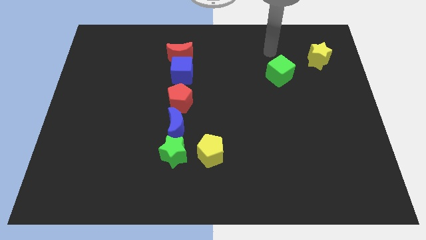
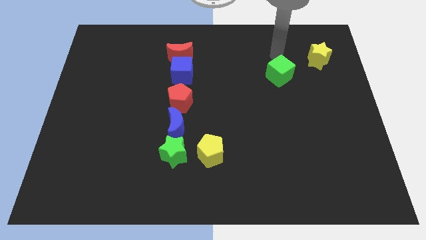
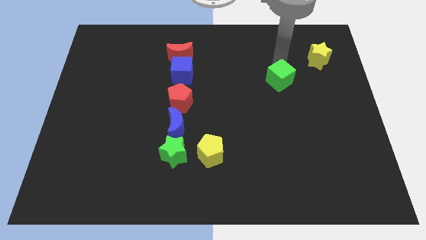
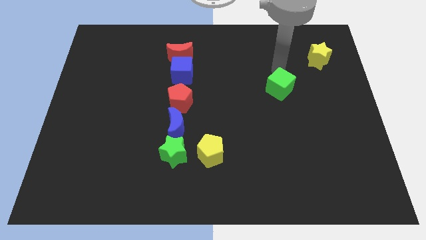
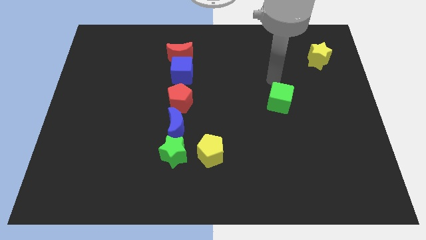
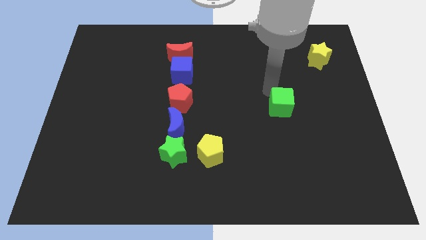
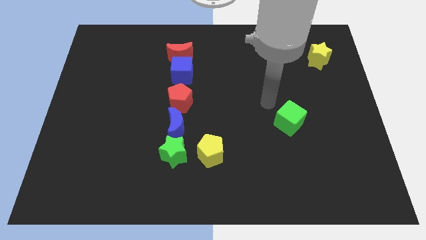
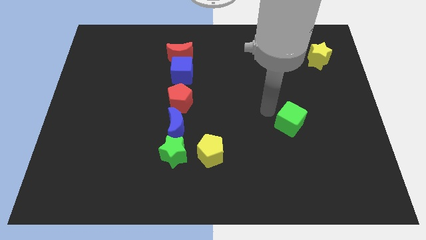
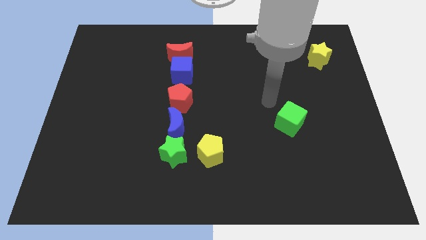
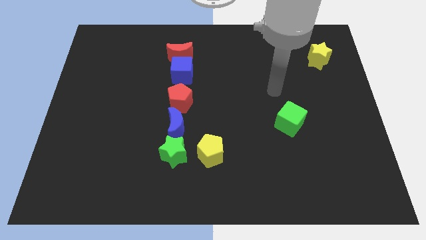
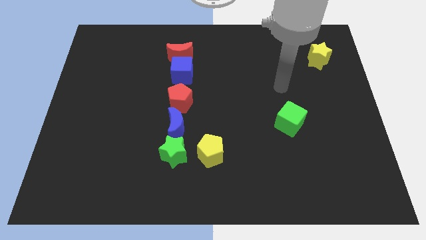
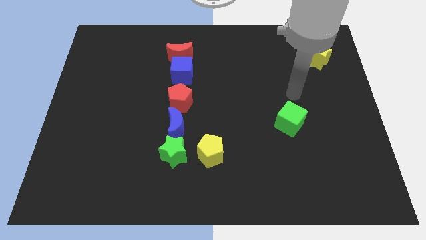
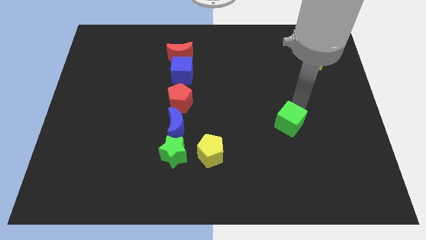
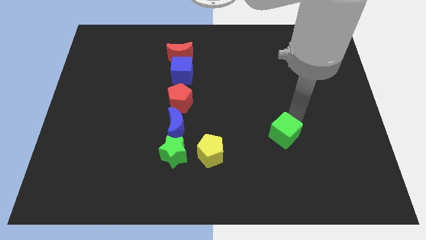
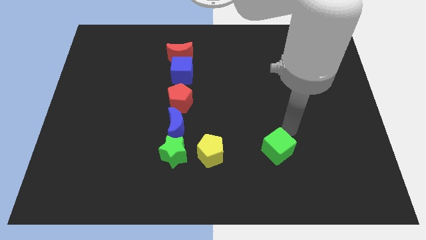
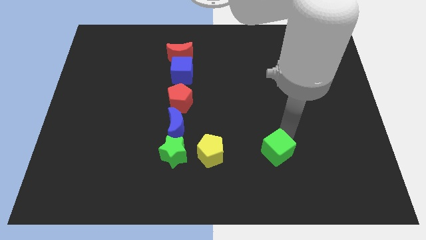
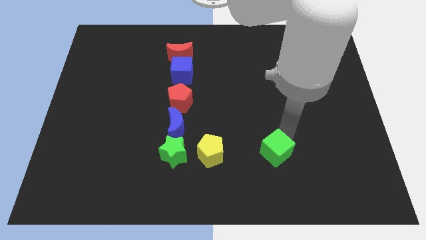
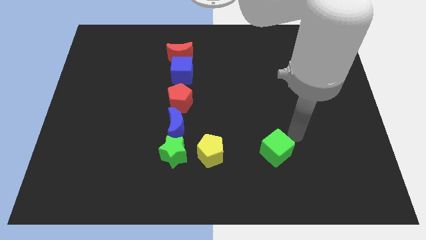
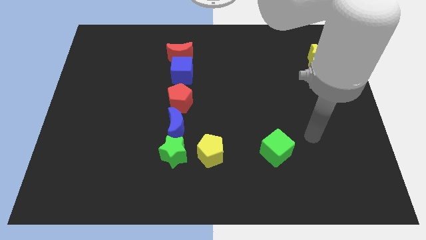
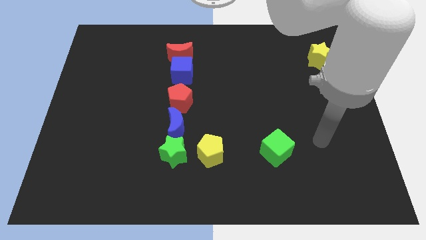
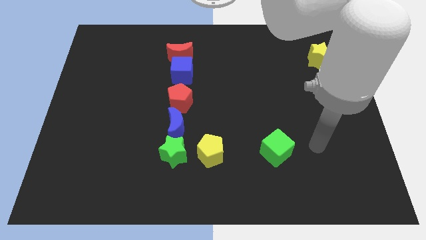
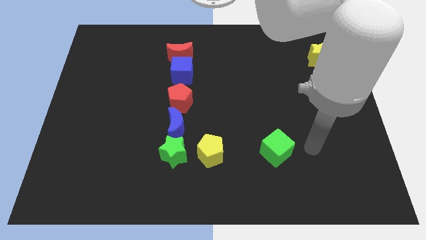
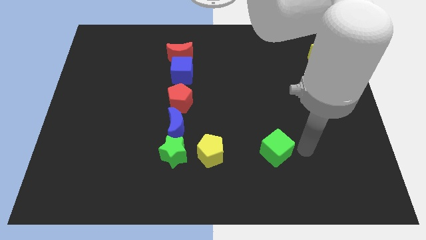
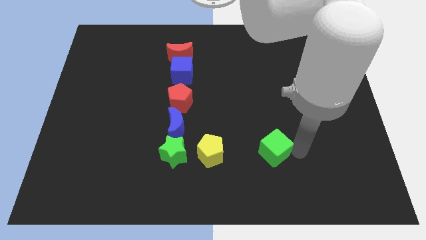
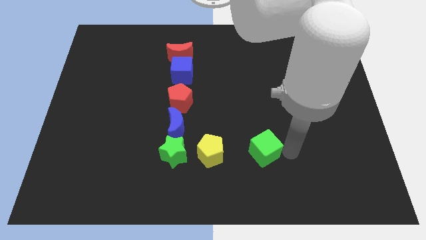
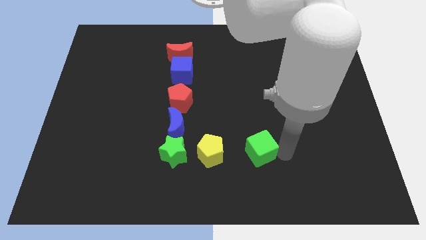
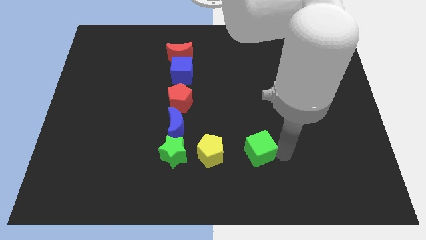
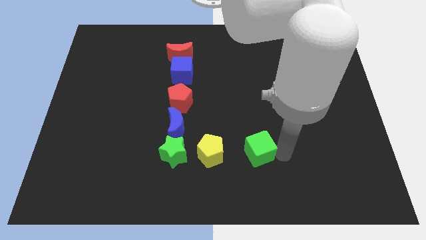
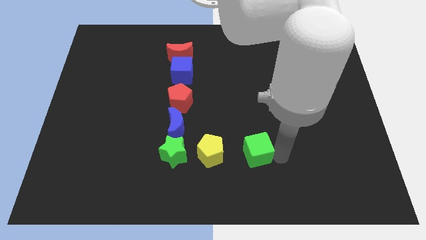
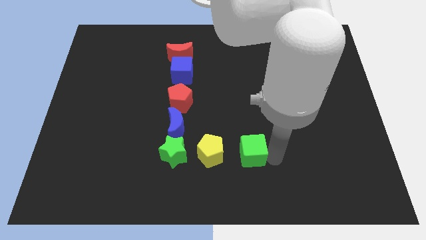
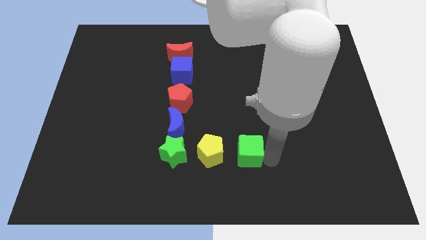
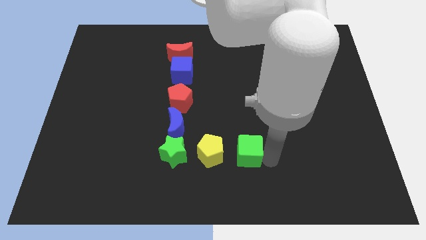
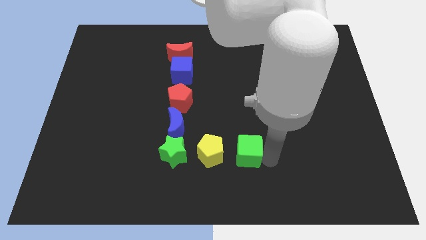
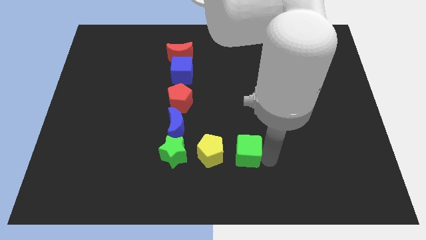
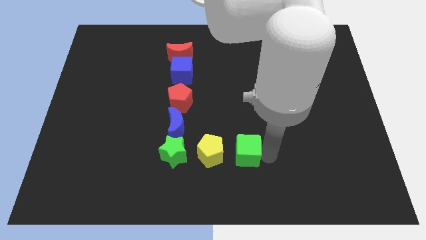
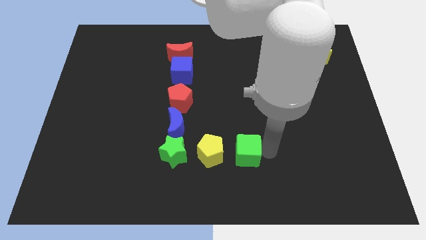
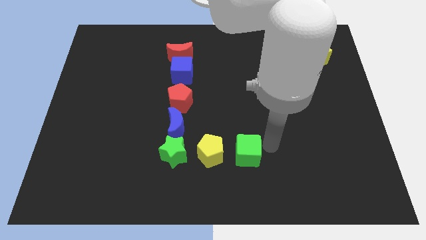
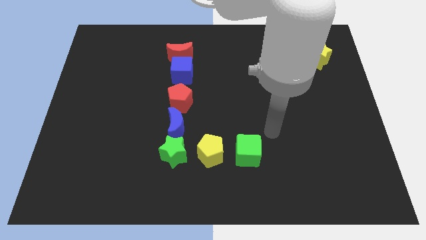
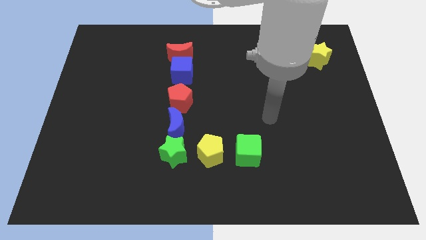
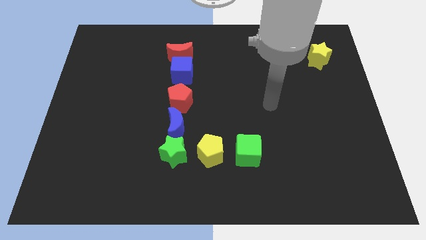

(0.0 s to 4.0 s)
push the green cube to the right of the yellow pentagon

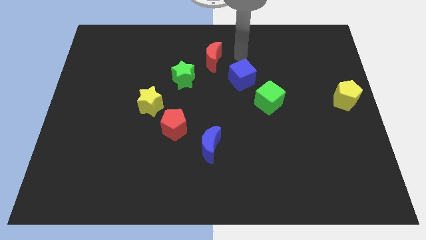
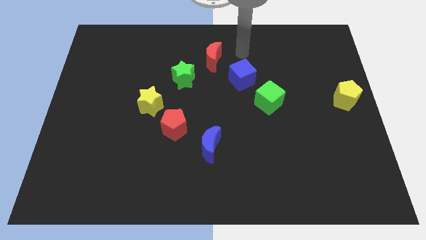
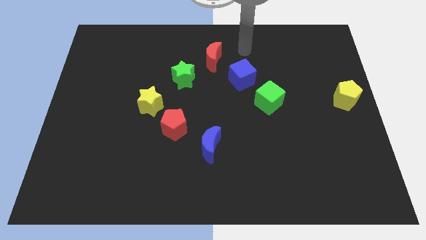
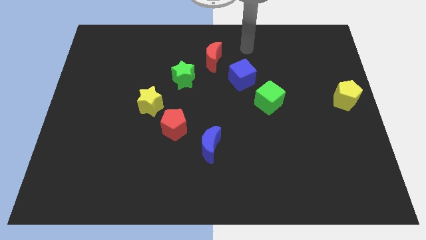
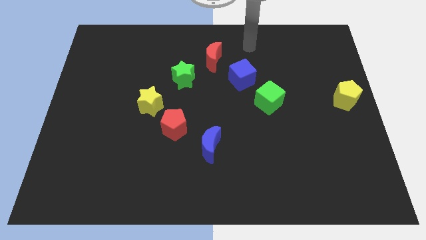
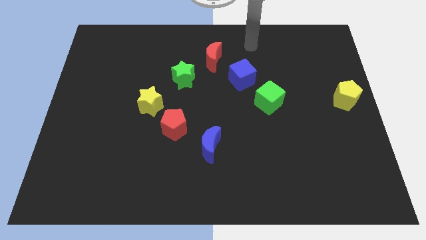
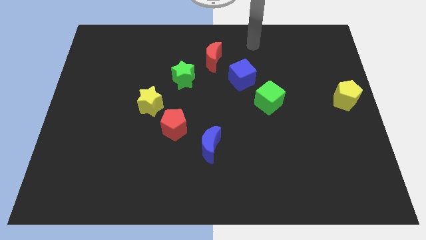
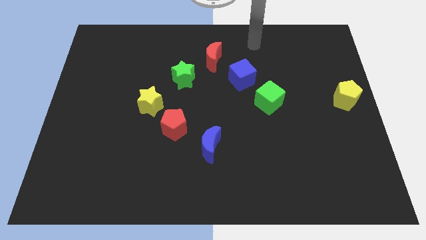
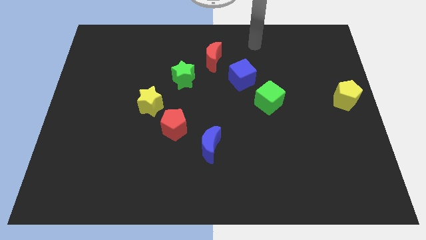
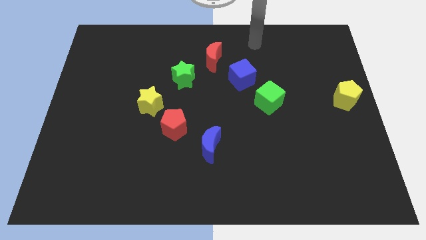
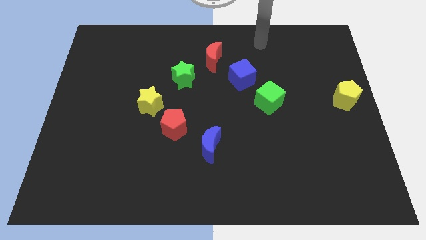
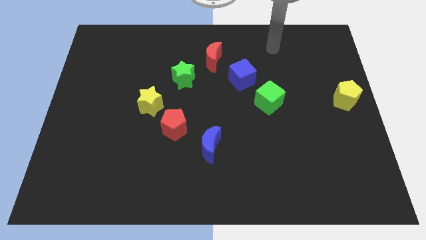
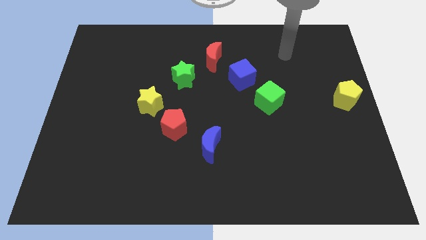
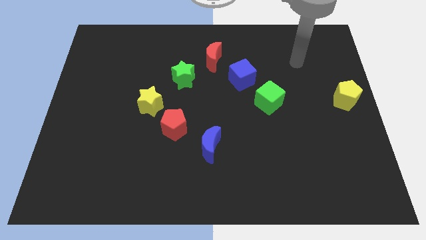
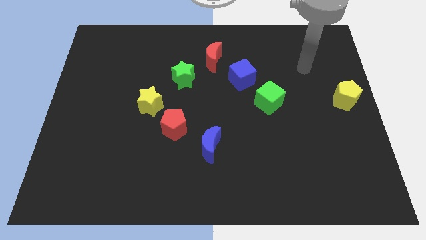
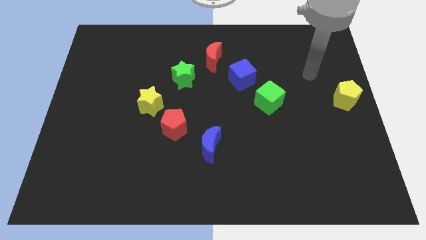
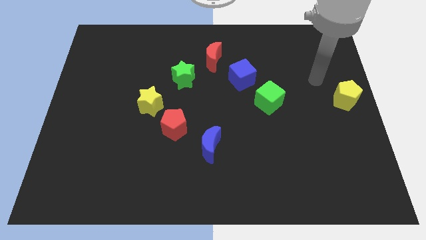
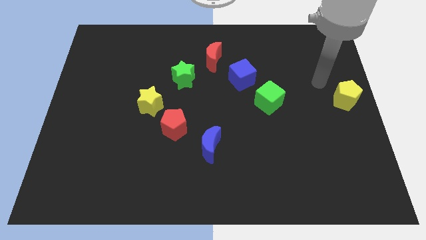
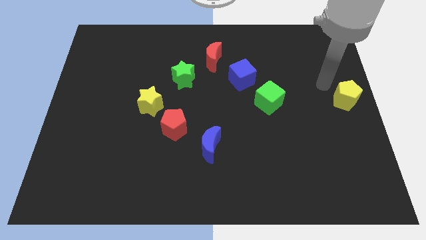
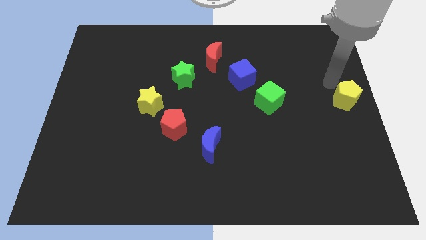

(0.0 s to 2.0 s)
move your arm towards the yellow pentagon

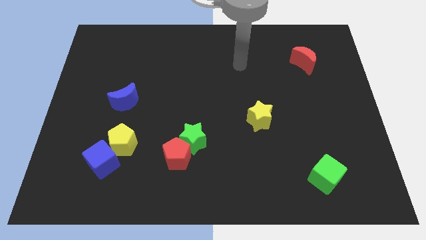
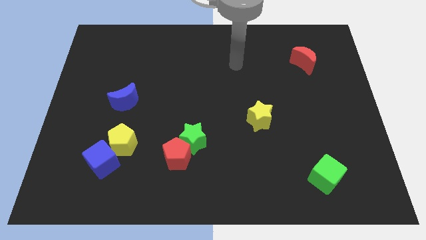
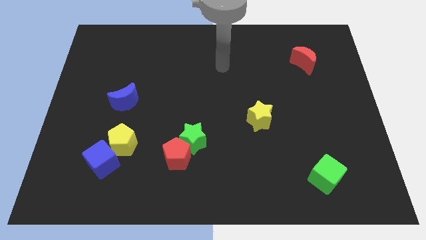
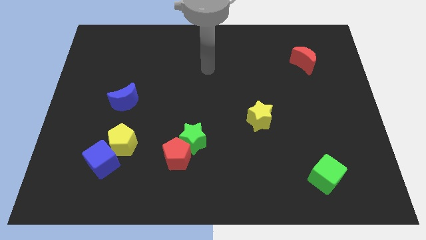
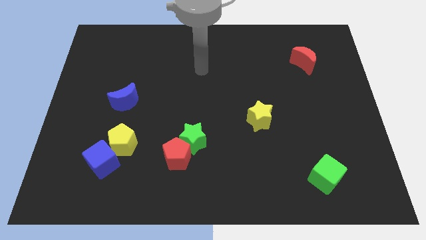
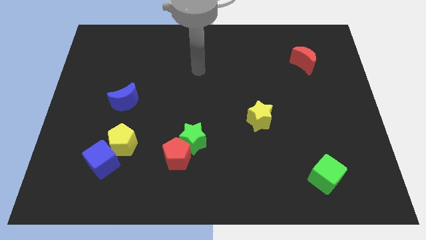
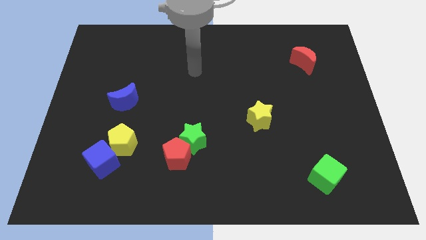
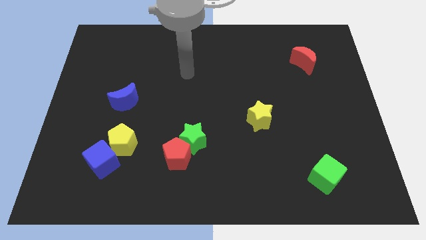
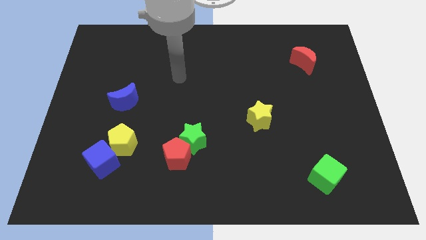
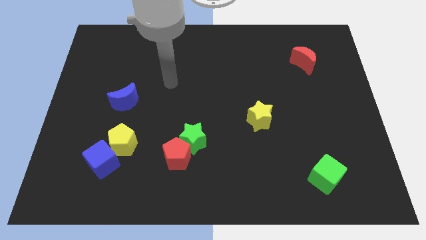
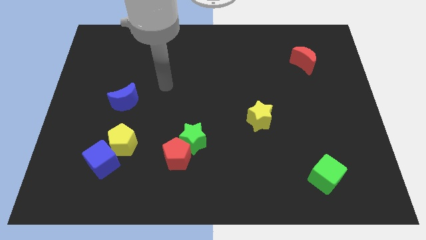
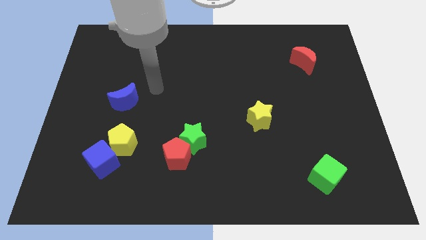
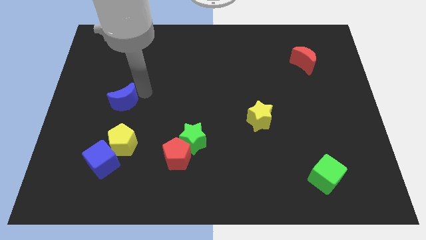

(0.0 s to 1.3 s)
place your arm to the right side of the blue moon

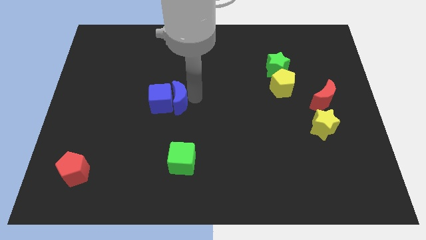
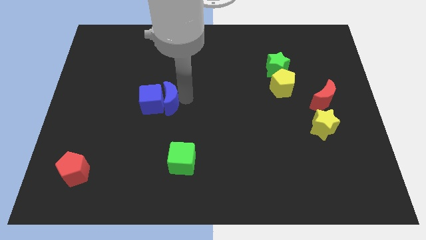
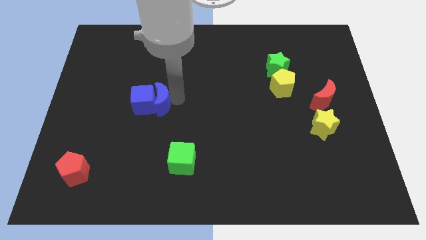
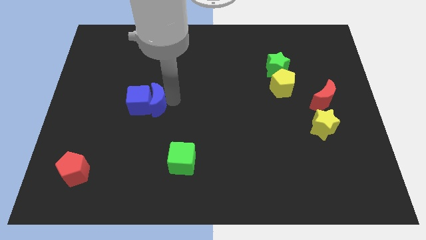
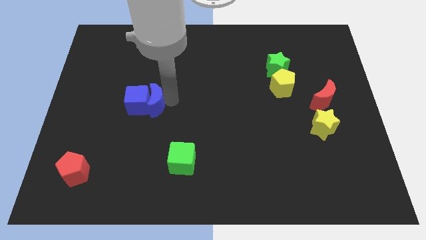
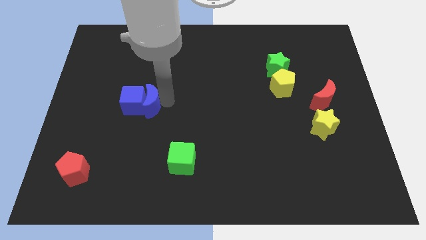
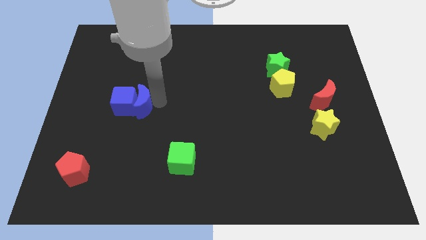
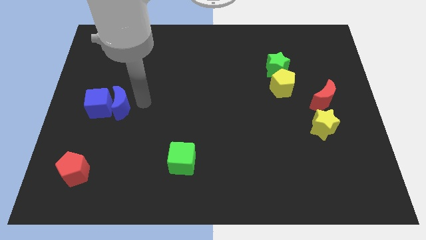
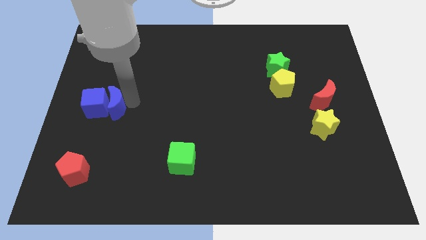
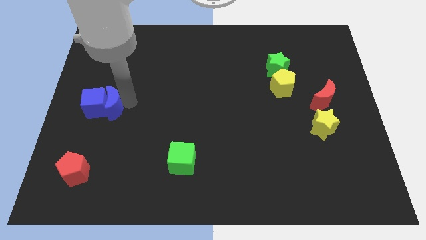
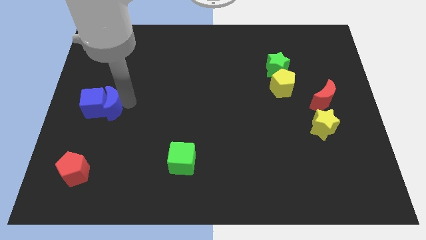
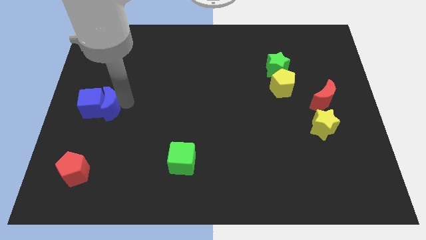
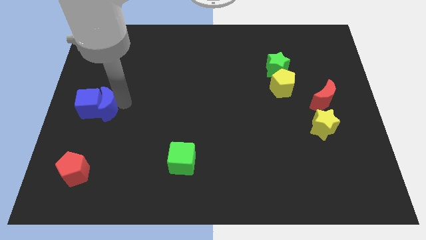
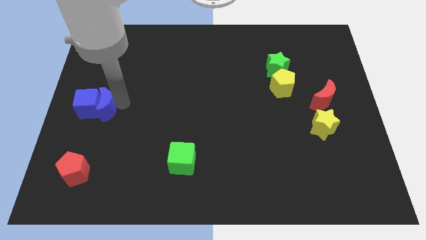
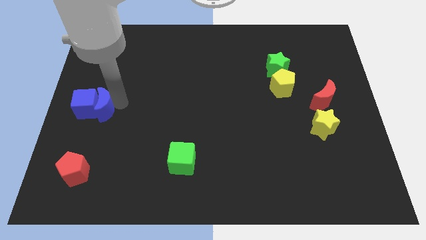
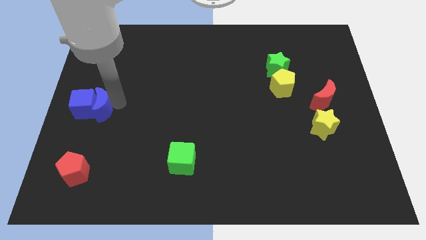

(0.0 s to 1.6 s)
move the blue blocks to the left center of the board
